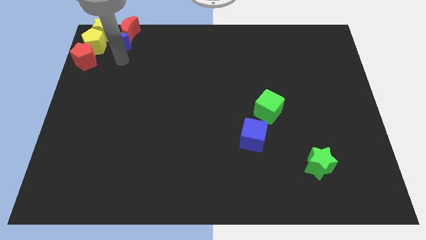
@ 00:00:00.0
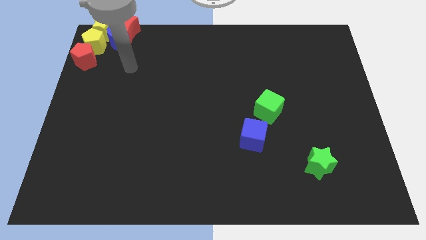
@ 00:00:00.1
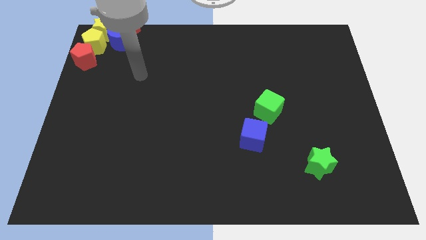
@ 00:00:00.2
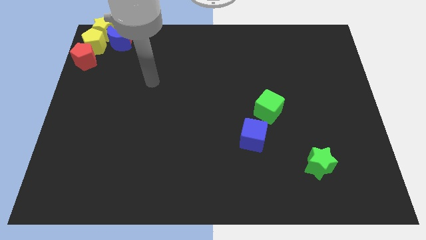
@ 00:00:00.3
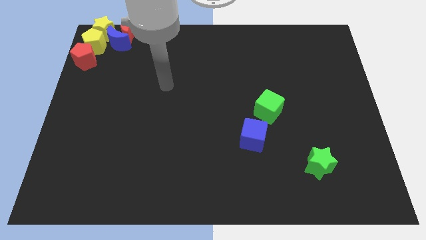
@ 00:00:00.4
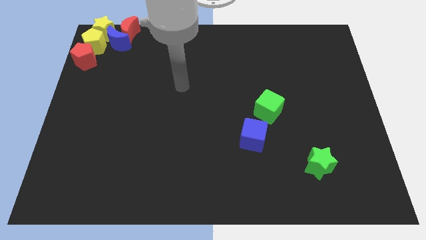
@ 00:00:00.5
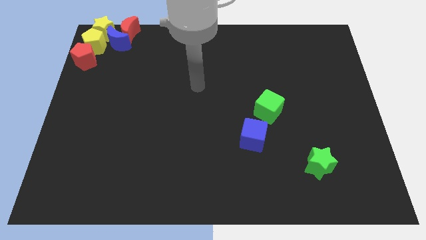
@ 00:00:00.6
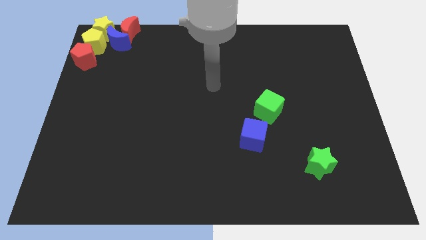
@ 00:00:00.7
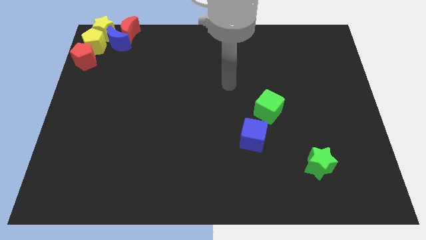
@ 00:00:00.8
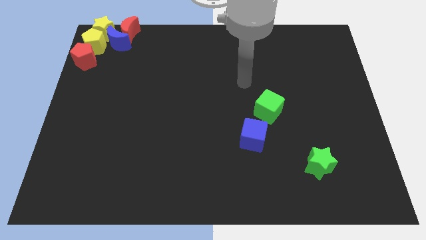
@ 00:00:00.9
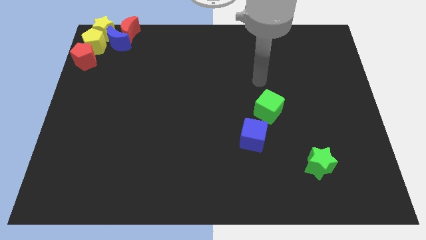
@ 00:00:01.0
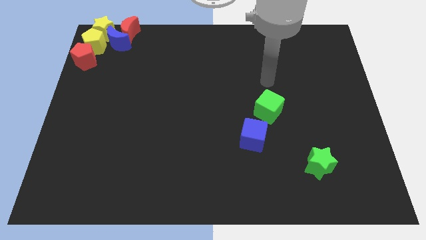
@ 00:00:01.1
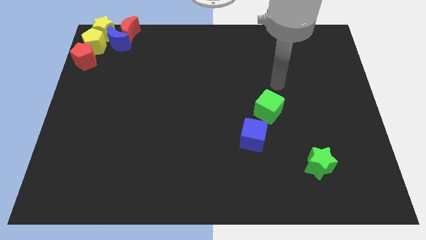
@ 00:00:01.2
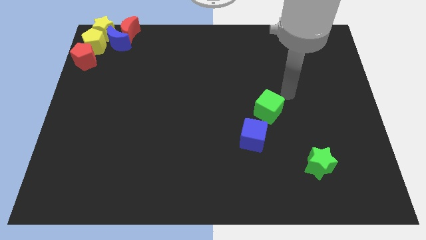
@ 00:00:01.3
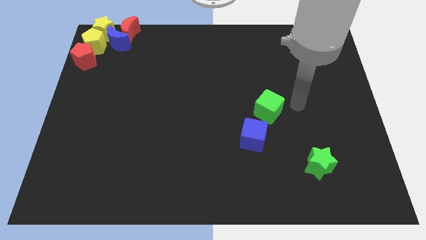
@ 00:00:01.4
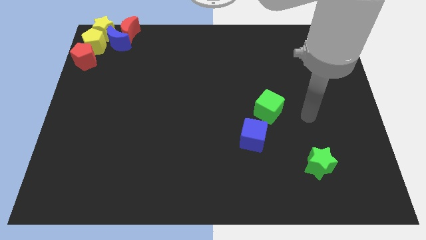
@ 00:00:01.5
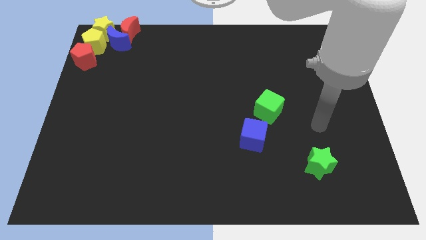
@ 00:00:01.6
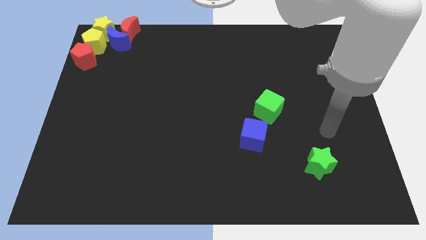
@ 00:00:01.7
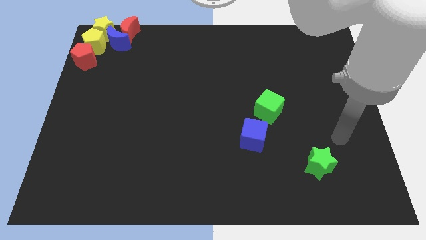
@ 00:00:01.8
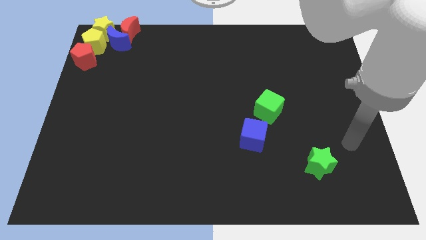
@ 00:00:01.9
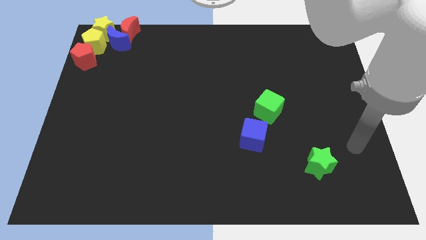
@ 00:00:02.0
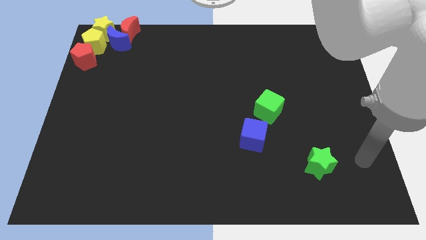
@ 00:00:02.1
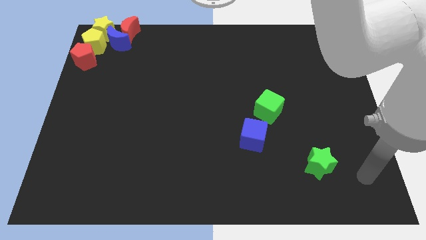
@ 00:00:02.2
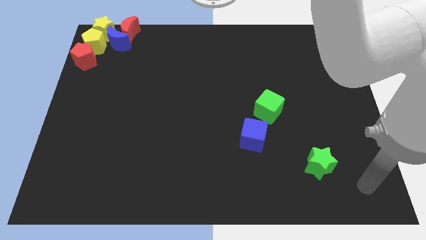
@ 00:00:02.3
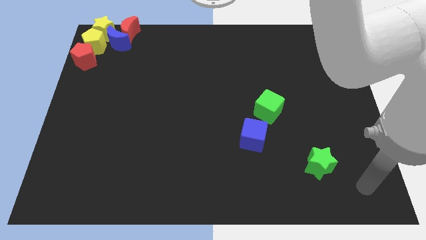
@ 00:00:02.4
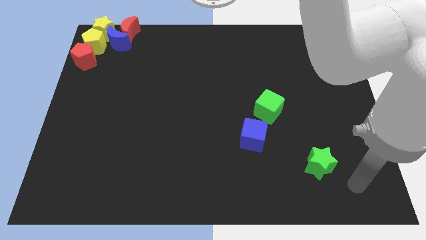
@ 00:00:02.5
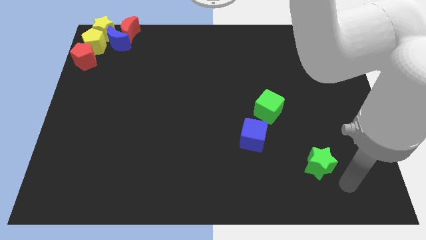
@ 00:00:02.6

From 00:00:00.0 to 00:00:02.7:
move your arm away from the blue moon

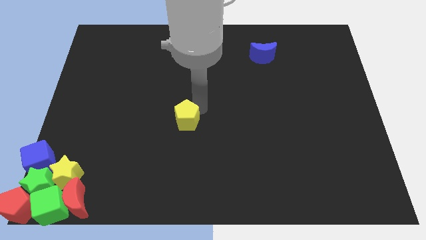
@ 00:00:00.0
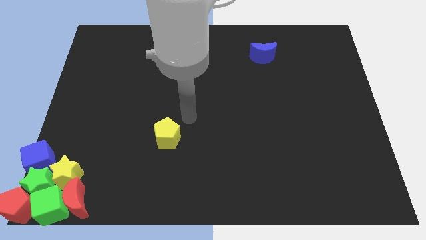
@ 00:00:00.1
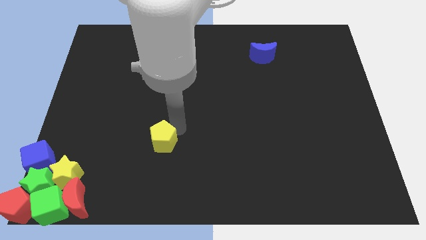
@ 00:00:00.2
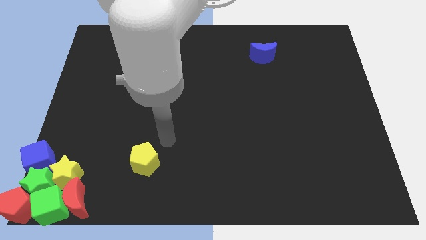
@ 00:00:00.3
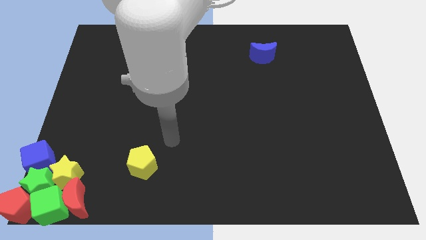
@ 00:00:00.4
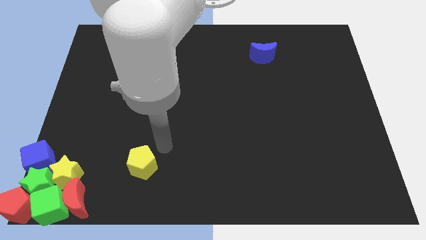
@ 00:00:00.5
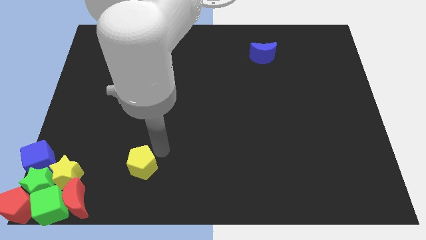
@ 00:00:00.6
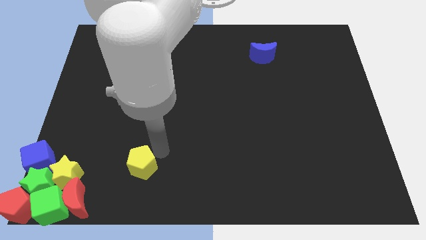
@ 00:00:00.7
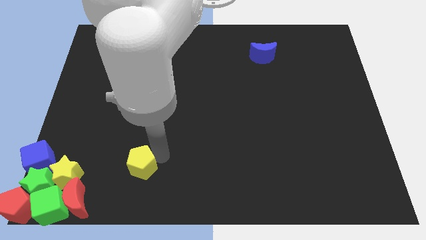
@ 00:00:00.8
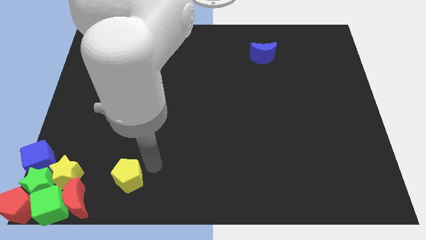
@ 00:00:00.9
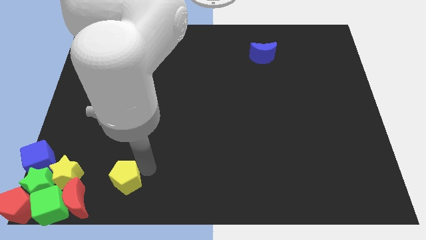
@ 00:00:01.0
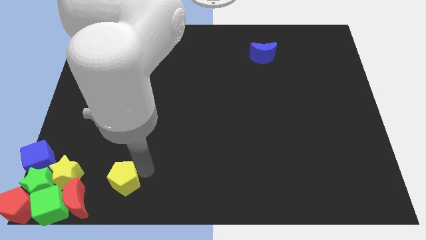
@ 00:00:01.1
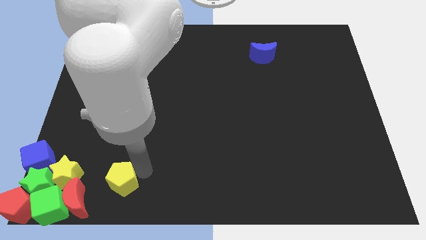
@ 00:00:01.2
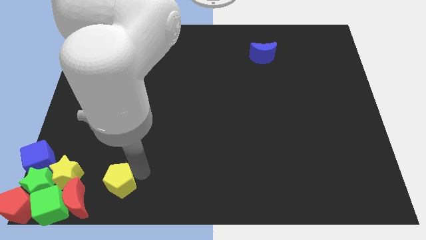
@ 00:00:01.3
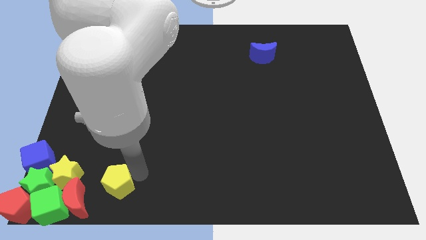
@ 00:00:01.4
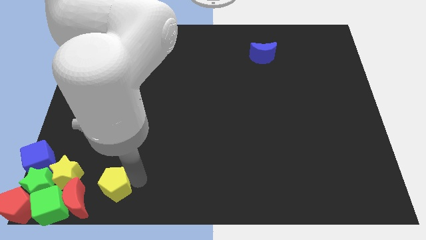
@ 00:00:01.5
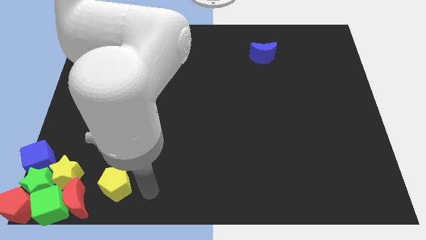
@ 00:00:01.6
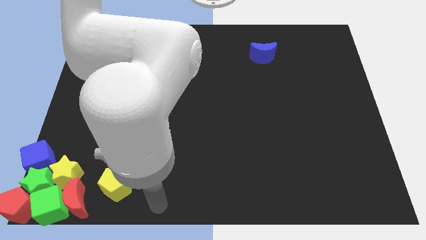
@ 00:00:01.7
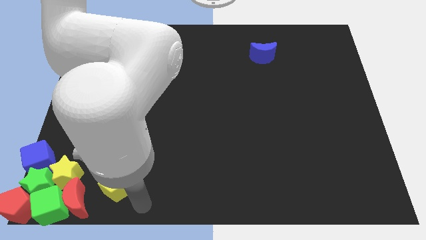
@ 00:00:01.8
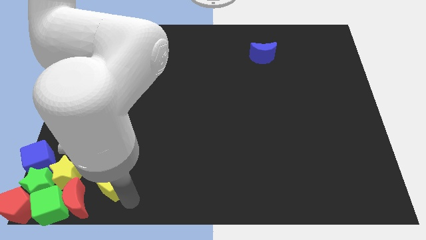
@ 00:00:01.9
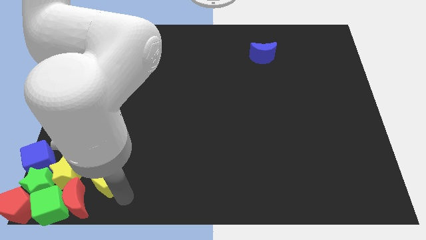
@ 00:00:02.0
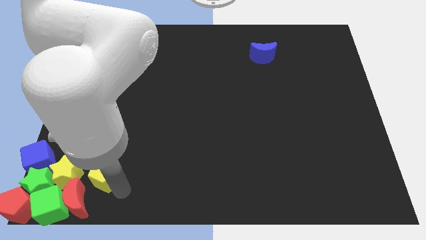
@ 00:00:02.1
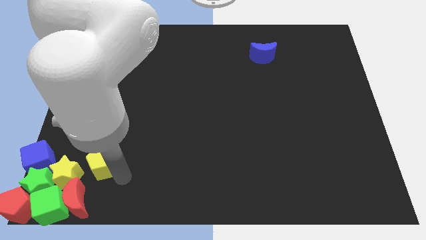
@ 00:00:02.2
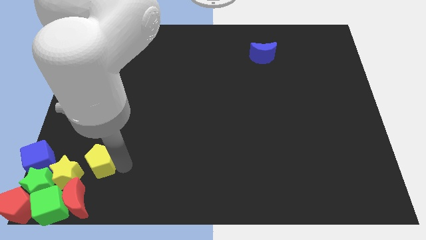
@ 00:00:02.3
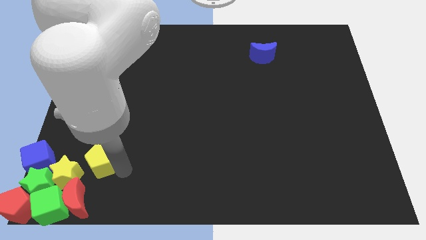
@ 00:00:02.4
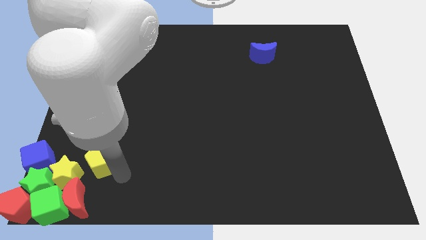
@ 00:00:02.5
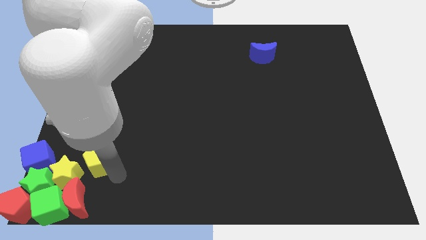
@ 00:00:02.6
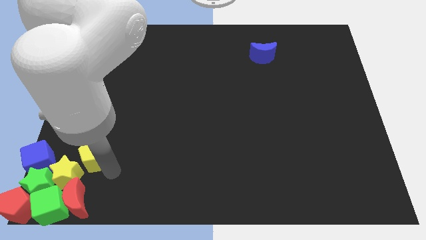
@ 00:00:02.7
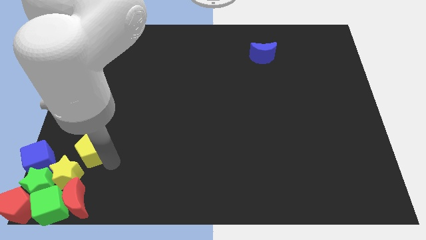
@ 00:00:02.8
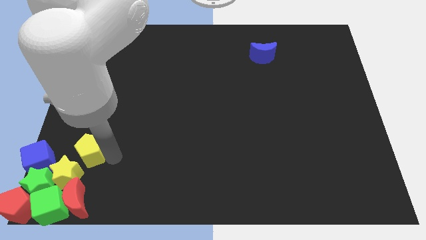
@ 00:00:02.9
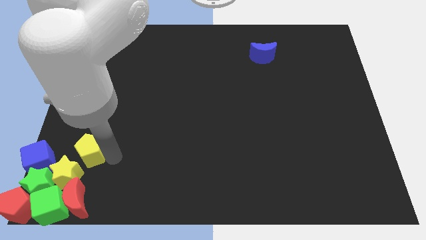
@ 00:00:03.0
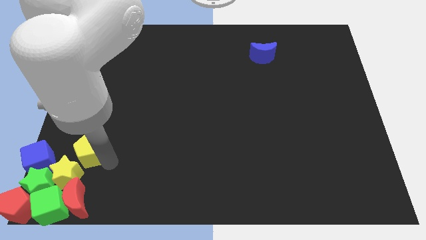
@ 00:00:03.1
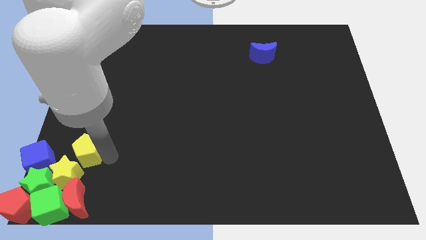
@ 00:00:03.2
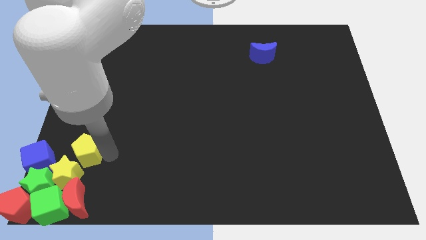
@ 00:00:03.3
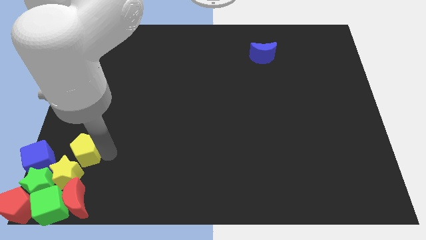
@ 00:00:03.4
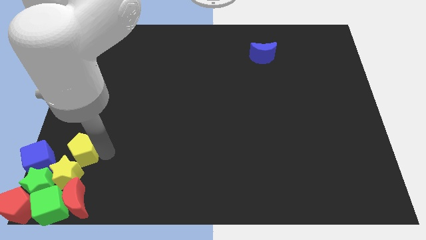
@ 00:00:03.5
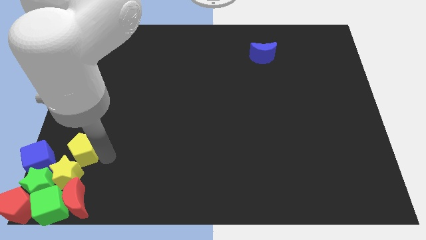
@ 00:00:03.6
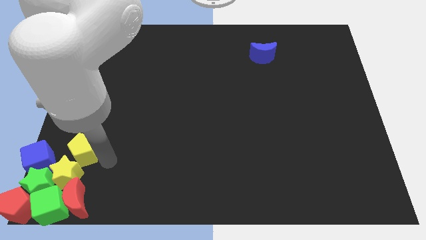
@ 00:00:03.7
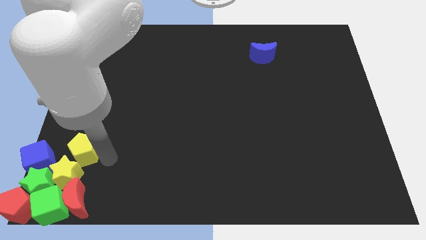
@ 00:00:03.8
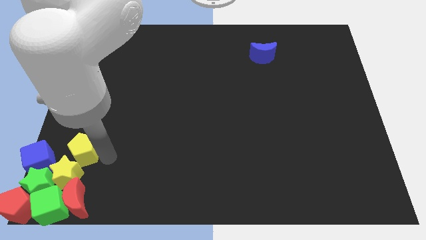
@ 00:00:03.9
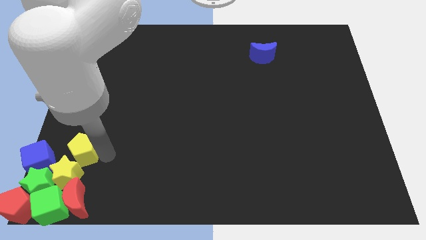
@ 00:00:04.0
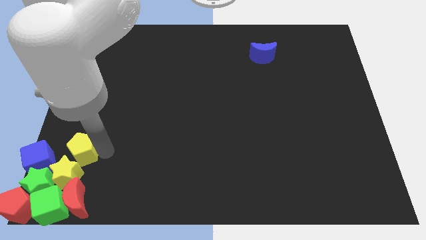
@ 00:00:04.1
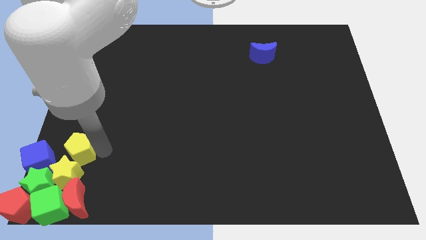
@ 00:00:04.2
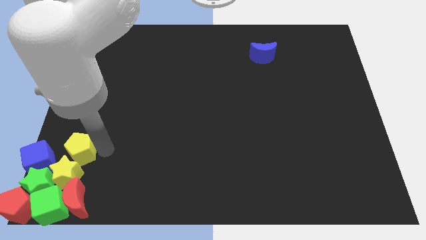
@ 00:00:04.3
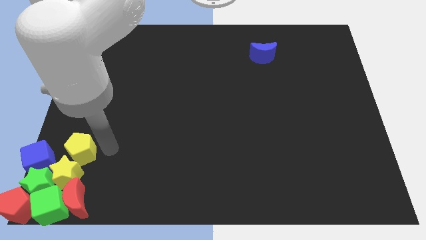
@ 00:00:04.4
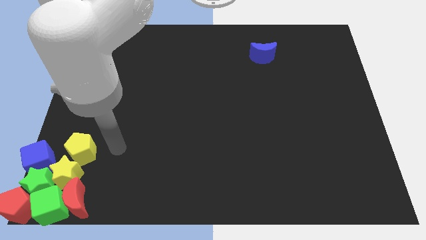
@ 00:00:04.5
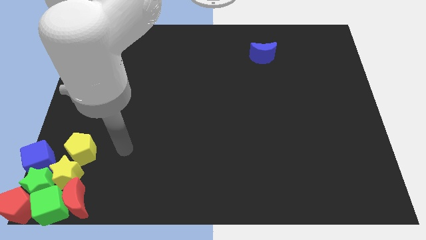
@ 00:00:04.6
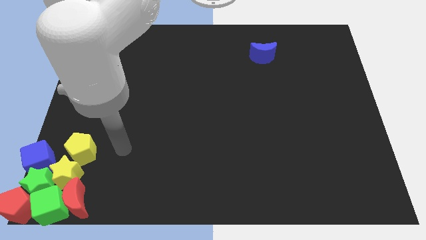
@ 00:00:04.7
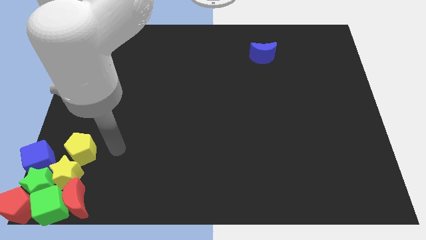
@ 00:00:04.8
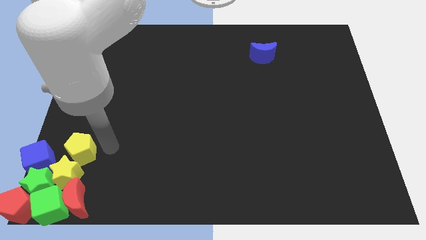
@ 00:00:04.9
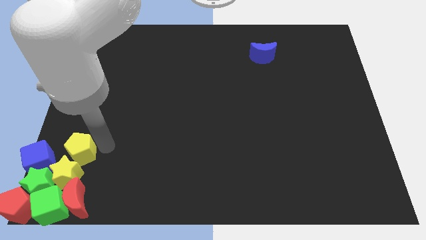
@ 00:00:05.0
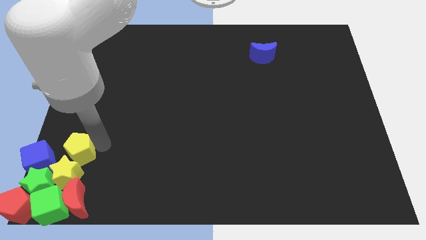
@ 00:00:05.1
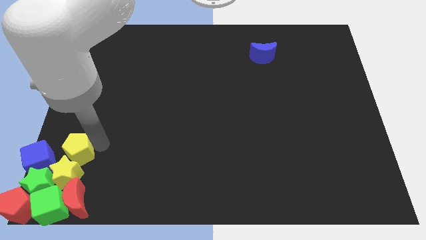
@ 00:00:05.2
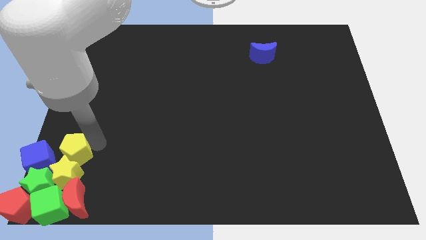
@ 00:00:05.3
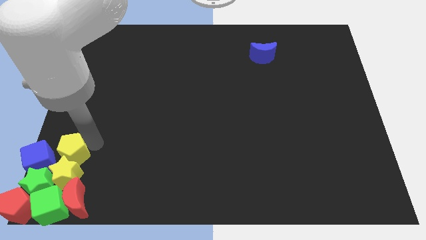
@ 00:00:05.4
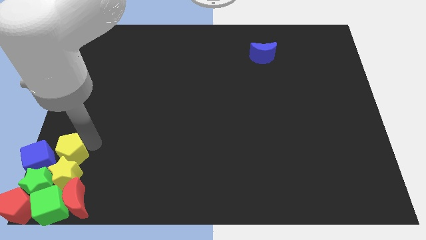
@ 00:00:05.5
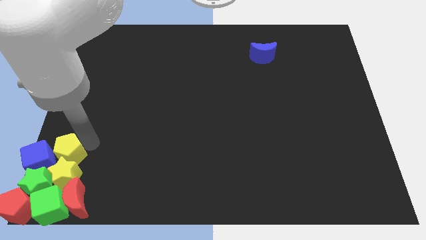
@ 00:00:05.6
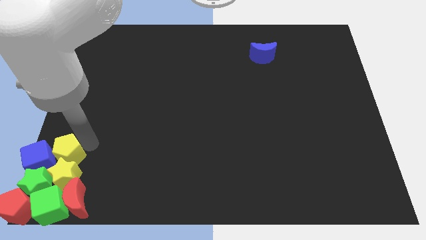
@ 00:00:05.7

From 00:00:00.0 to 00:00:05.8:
move the yellow pentagon above the yellow star

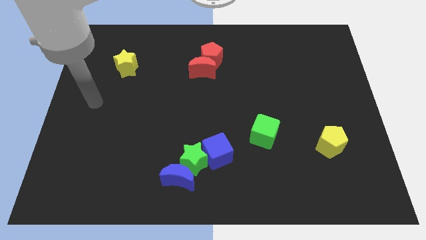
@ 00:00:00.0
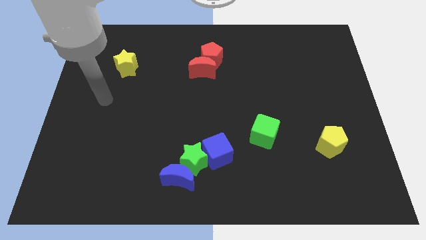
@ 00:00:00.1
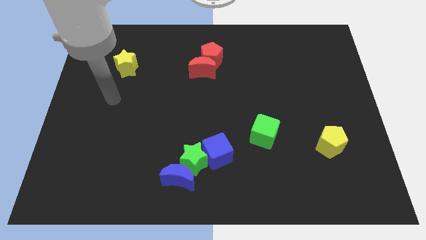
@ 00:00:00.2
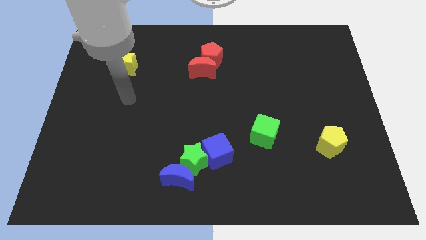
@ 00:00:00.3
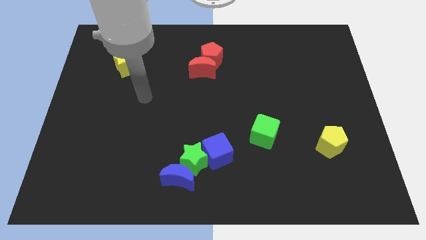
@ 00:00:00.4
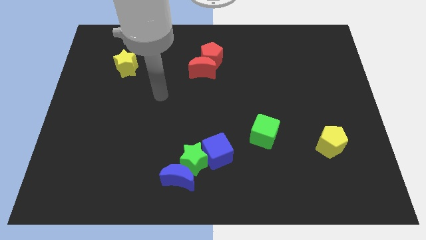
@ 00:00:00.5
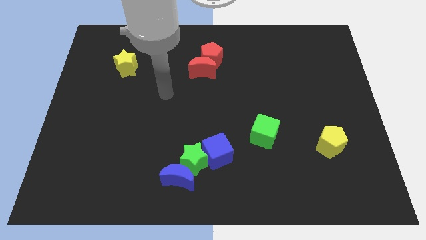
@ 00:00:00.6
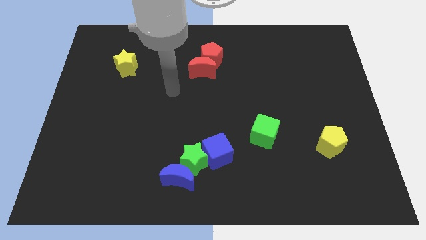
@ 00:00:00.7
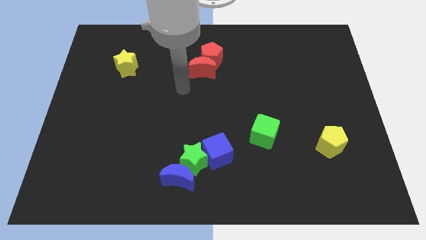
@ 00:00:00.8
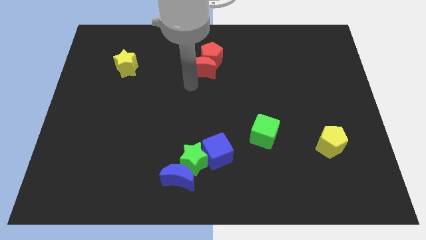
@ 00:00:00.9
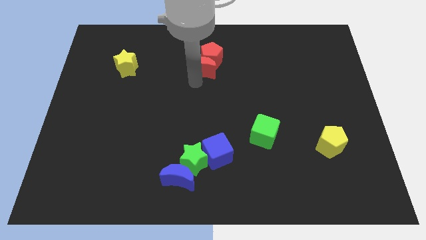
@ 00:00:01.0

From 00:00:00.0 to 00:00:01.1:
point your arm at the bottom of the red crescent
